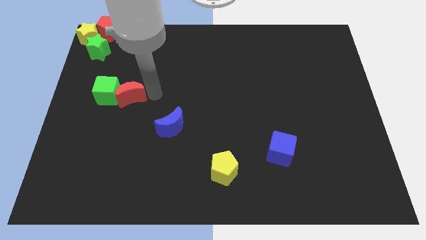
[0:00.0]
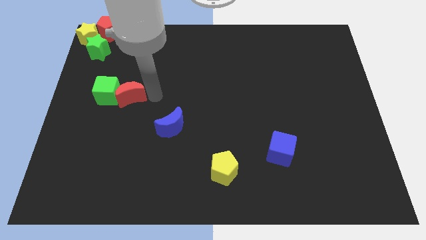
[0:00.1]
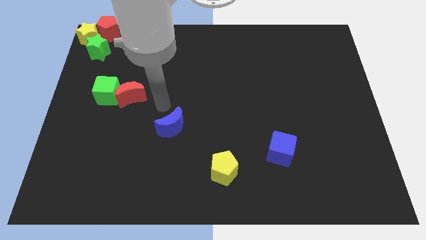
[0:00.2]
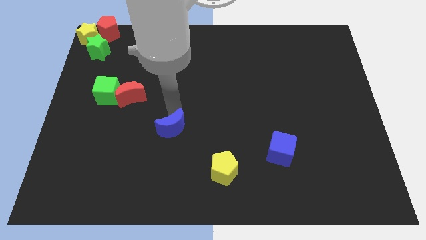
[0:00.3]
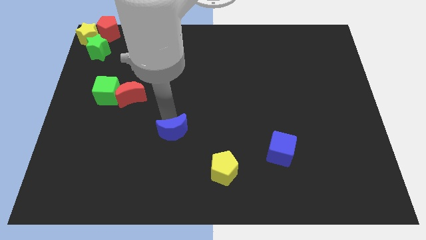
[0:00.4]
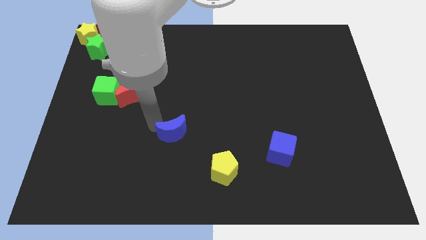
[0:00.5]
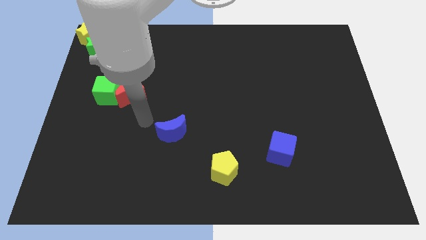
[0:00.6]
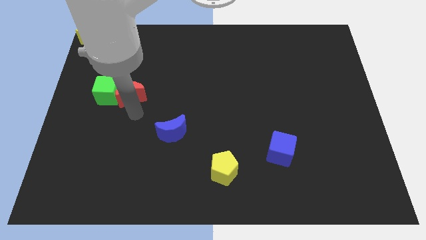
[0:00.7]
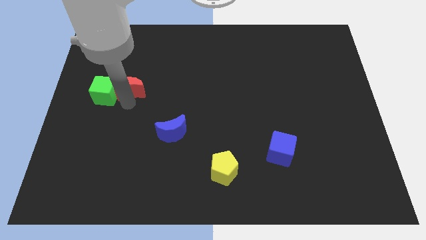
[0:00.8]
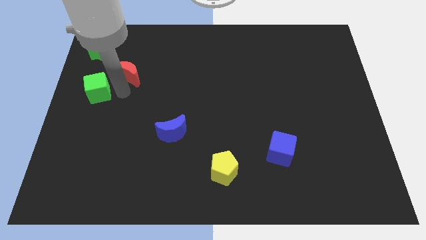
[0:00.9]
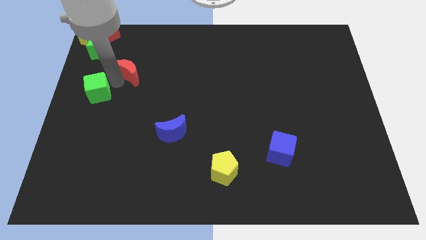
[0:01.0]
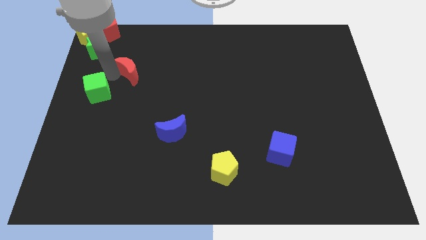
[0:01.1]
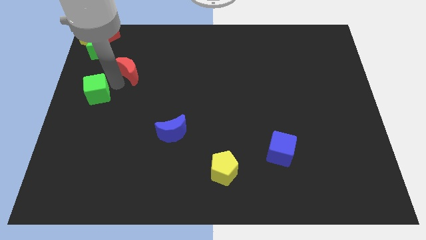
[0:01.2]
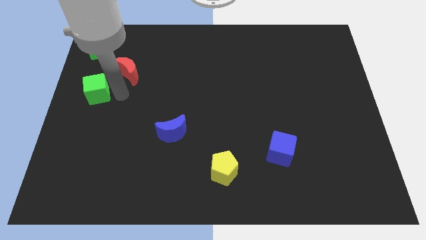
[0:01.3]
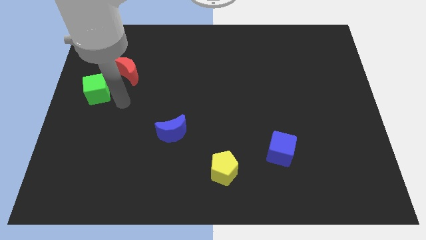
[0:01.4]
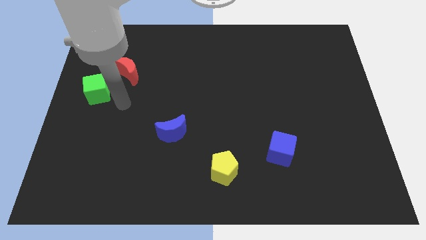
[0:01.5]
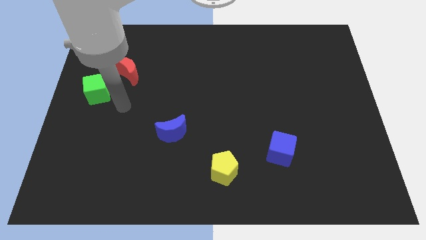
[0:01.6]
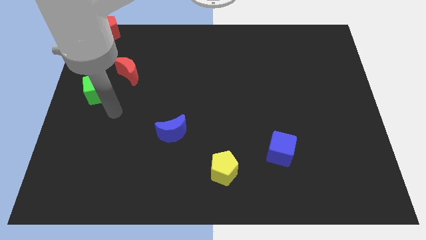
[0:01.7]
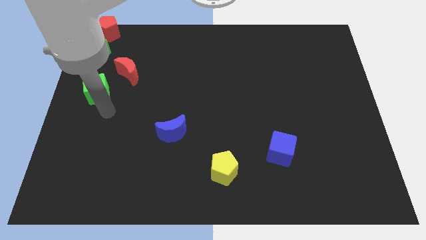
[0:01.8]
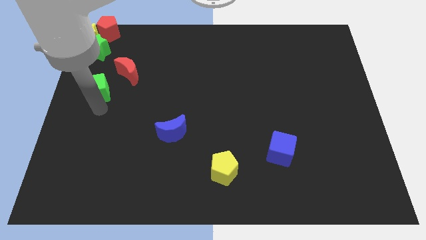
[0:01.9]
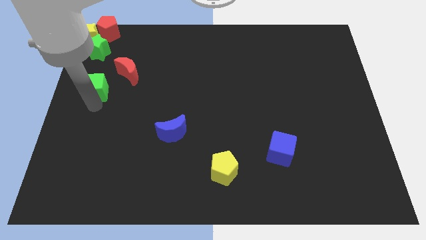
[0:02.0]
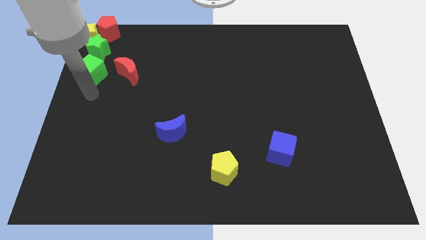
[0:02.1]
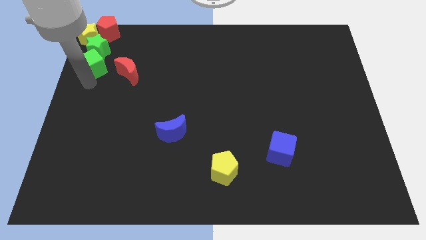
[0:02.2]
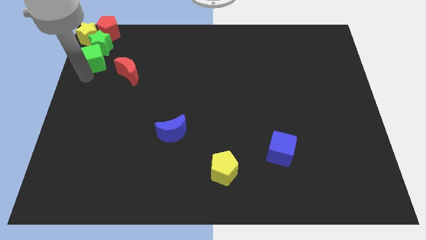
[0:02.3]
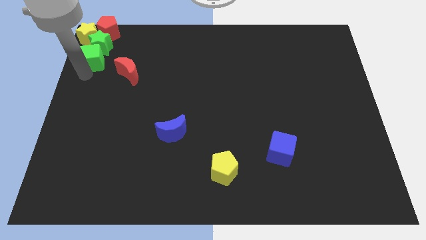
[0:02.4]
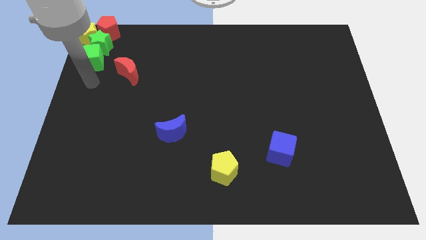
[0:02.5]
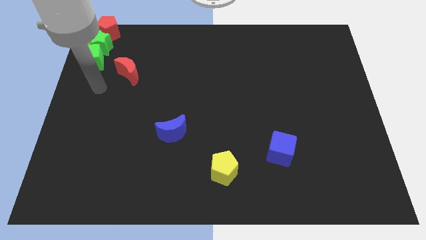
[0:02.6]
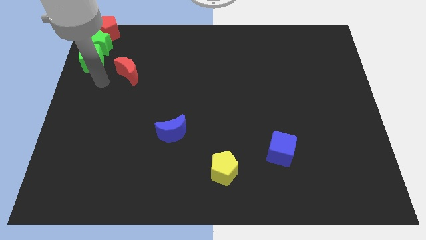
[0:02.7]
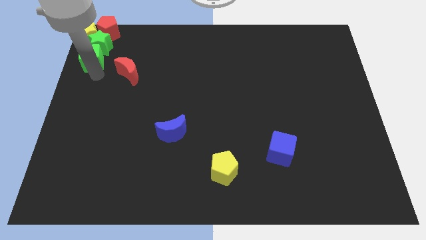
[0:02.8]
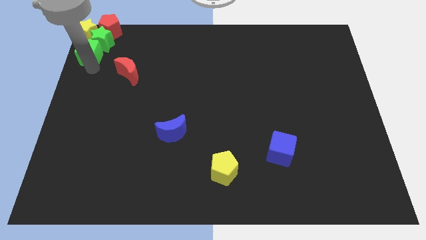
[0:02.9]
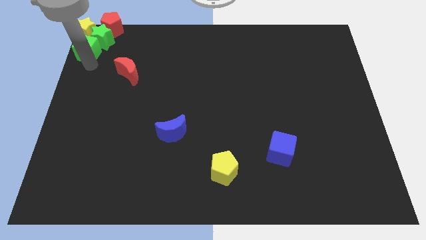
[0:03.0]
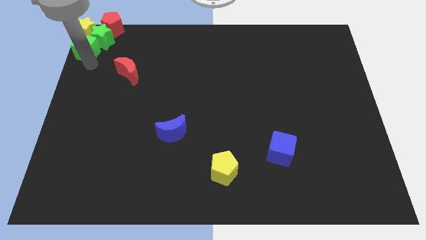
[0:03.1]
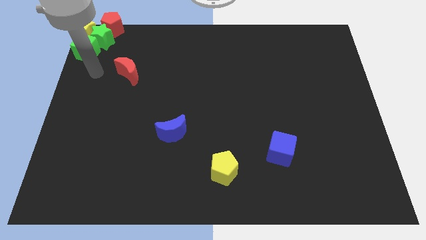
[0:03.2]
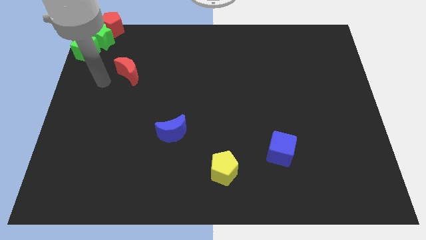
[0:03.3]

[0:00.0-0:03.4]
push the green cube into a green star

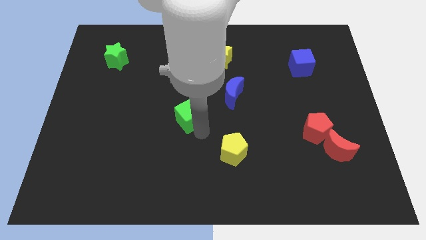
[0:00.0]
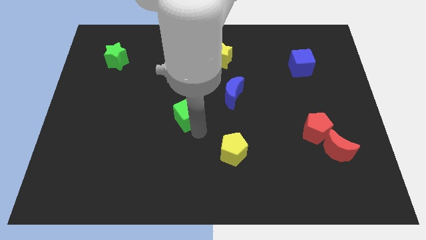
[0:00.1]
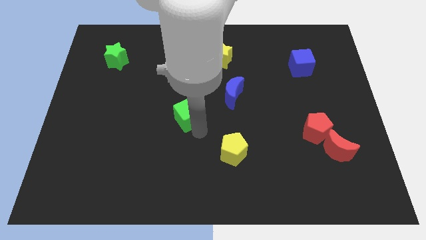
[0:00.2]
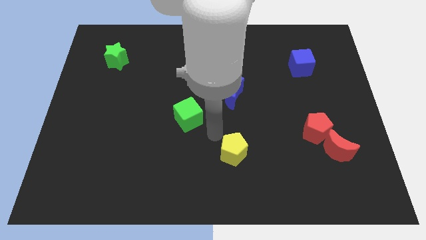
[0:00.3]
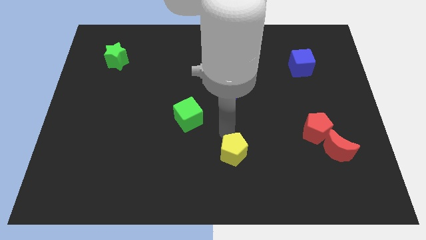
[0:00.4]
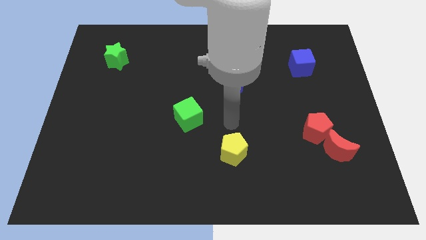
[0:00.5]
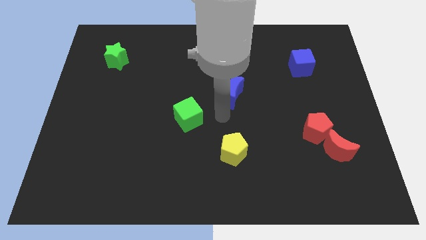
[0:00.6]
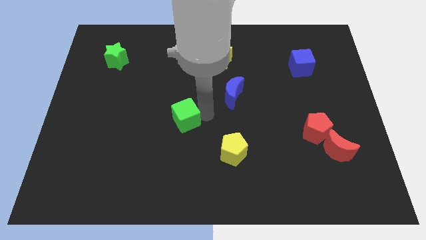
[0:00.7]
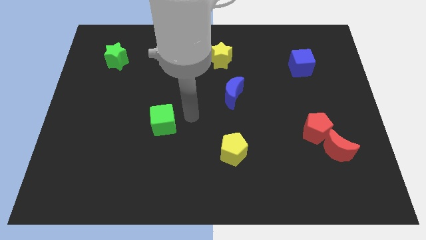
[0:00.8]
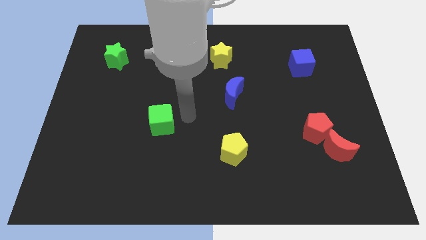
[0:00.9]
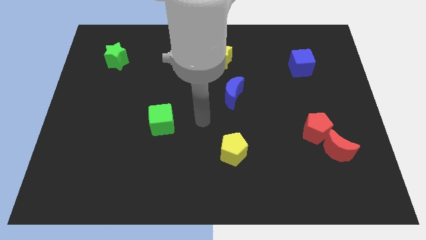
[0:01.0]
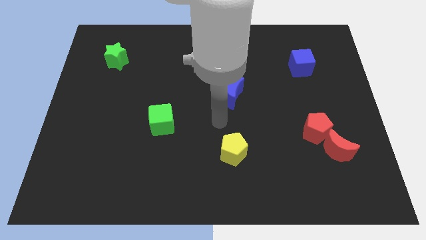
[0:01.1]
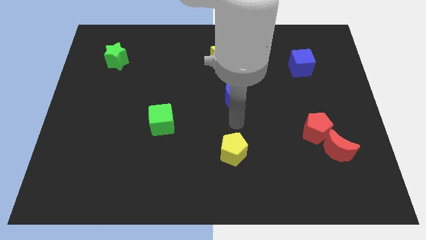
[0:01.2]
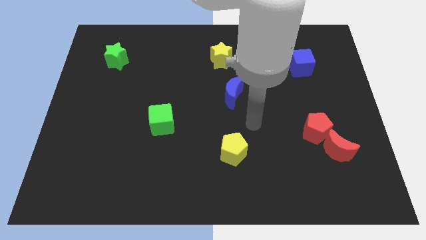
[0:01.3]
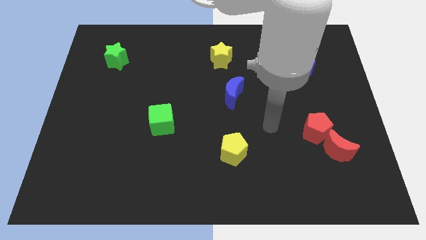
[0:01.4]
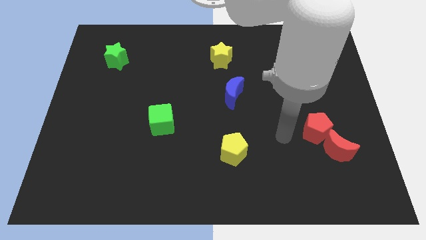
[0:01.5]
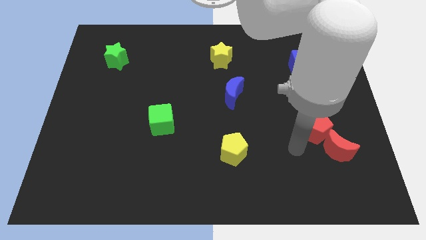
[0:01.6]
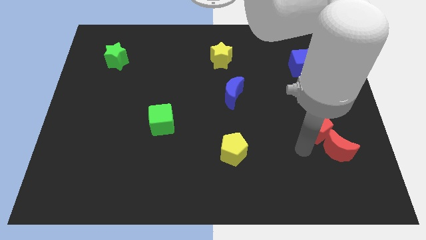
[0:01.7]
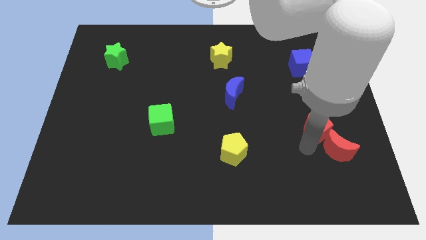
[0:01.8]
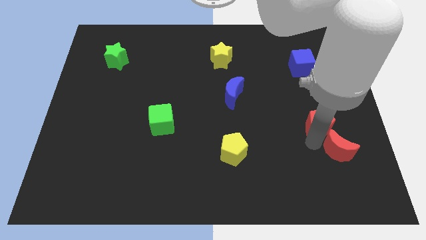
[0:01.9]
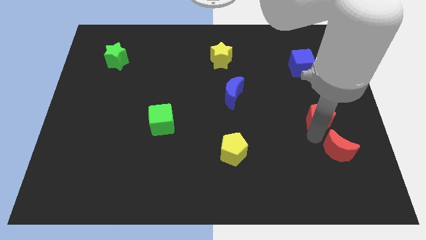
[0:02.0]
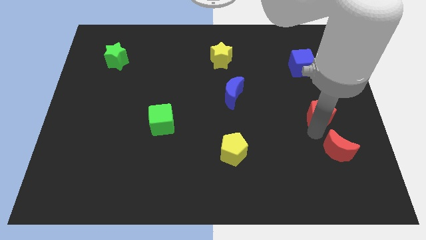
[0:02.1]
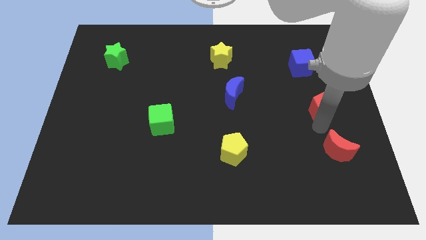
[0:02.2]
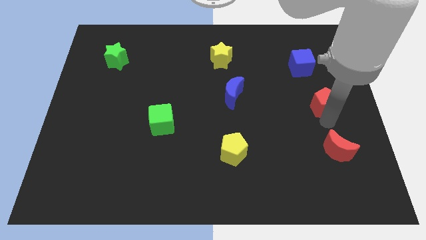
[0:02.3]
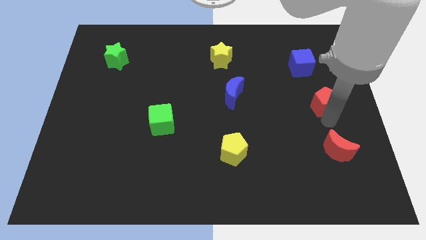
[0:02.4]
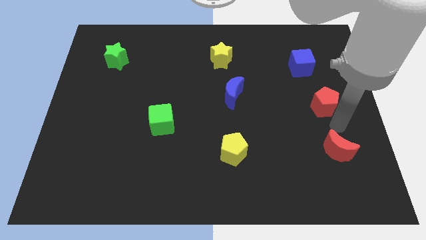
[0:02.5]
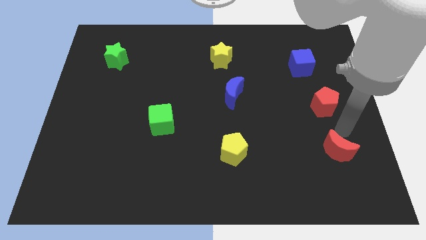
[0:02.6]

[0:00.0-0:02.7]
move the red pentagon up slightly

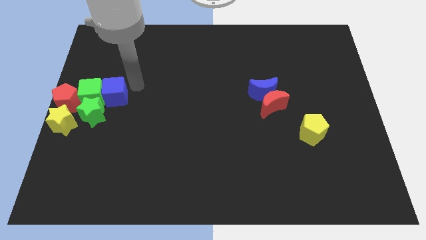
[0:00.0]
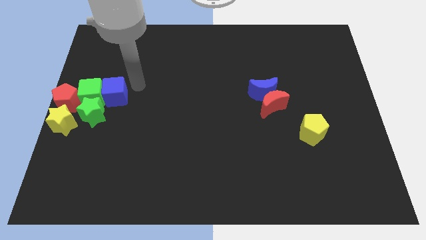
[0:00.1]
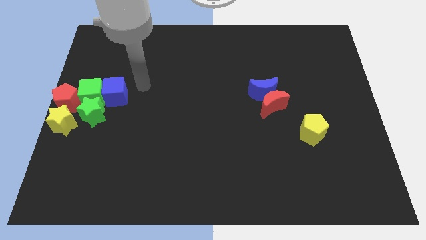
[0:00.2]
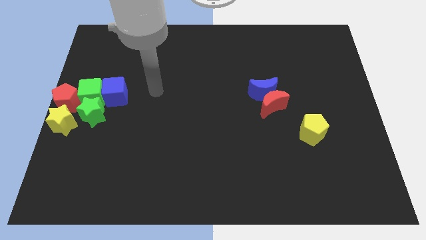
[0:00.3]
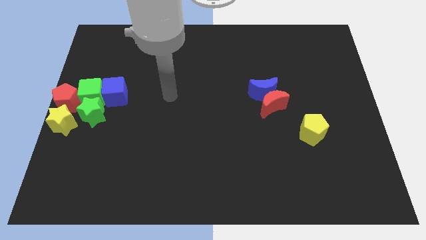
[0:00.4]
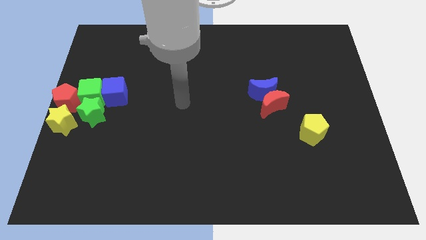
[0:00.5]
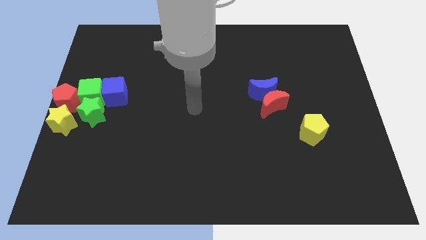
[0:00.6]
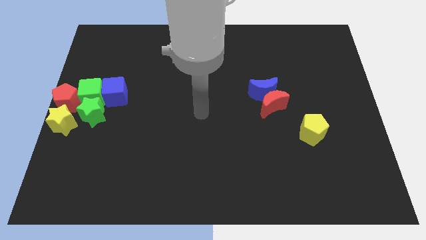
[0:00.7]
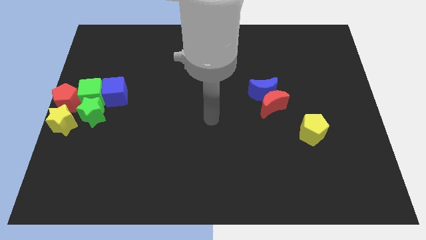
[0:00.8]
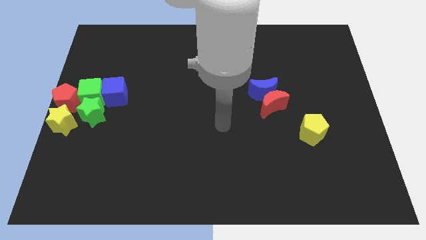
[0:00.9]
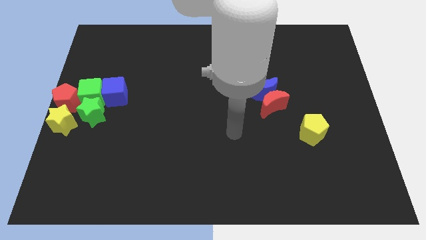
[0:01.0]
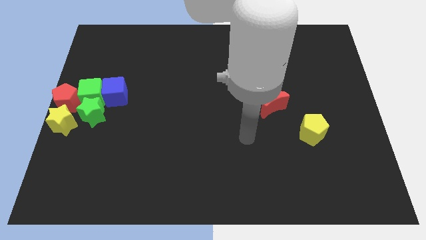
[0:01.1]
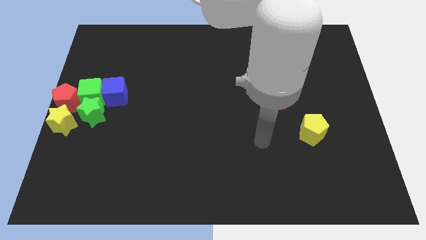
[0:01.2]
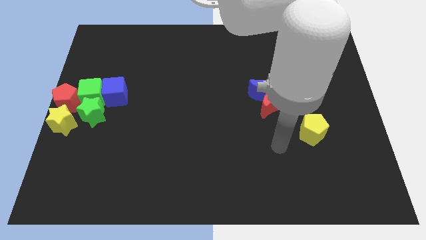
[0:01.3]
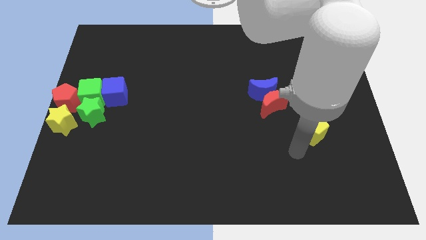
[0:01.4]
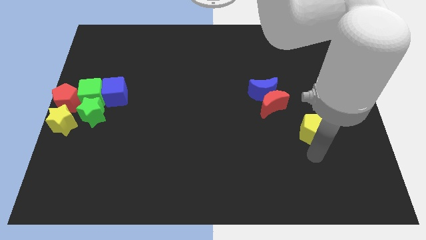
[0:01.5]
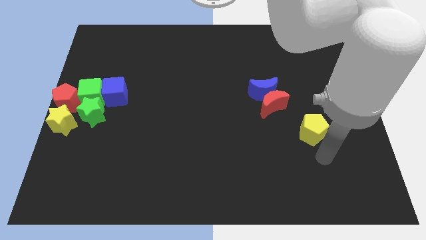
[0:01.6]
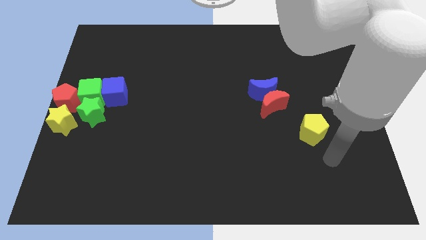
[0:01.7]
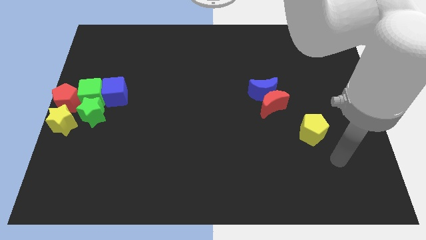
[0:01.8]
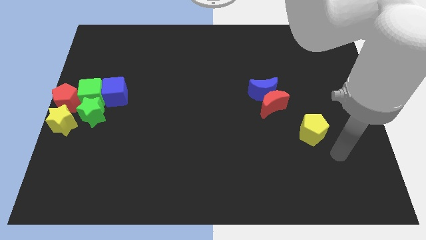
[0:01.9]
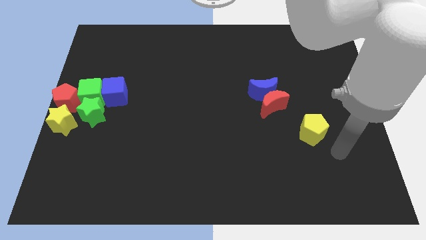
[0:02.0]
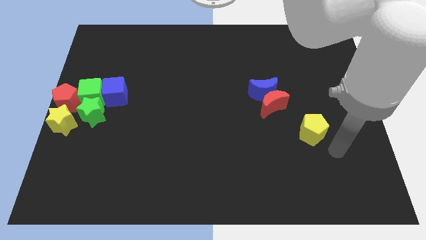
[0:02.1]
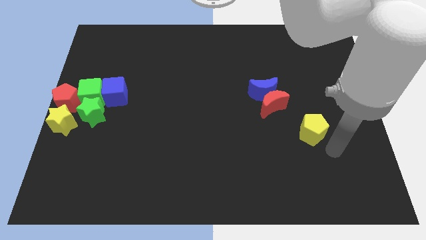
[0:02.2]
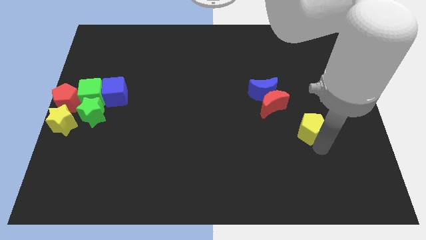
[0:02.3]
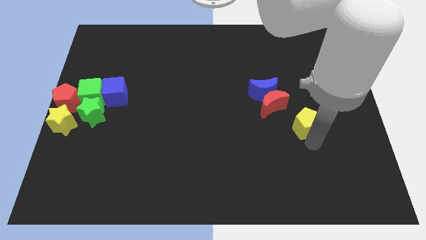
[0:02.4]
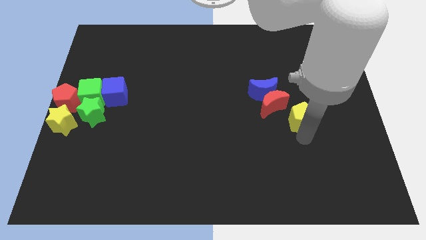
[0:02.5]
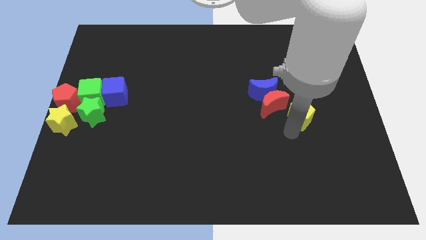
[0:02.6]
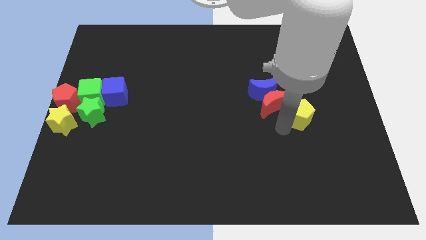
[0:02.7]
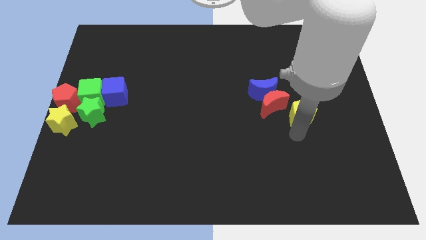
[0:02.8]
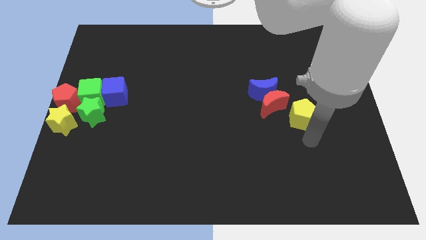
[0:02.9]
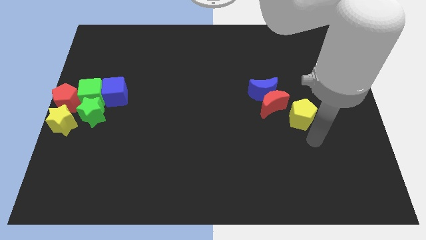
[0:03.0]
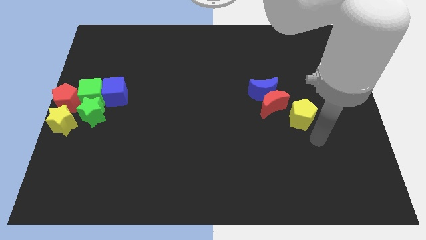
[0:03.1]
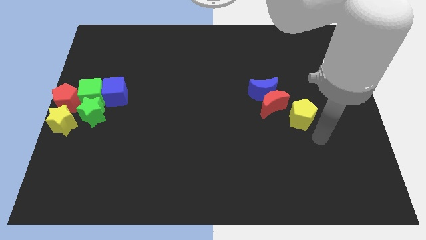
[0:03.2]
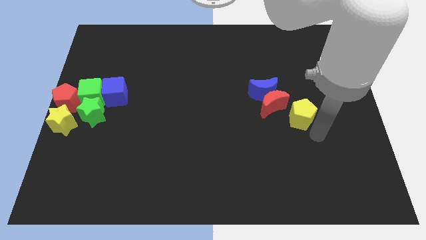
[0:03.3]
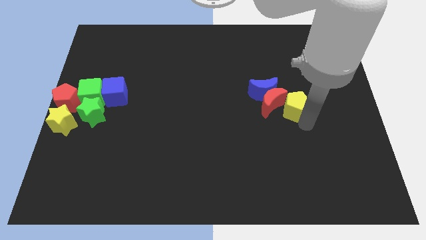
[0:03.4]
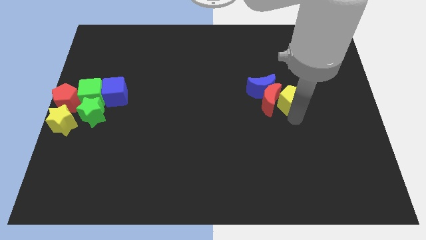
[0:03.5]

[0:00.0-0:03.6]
move the yellow pentagon into the red moon
